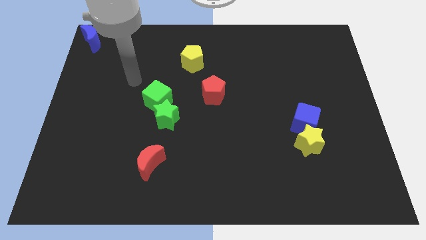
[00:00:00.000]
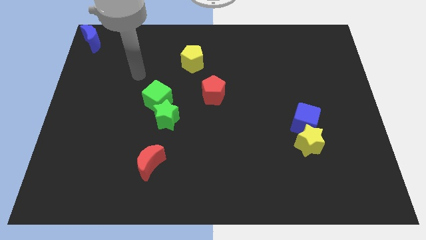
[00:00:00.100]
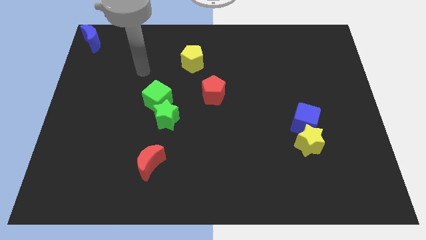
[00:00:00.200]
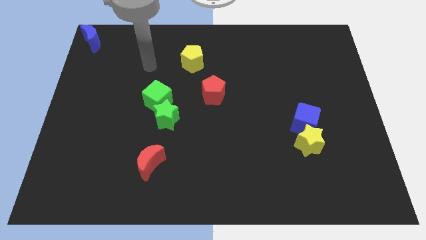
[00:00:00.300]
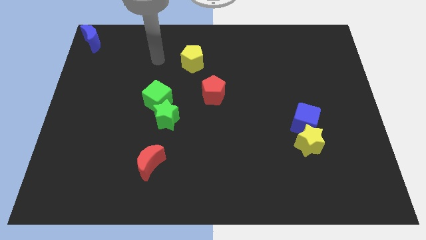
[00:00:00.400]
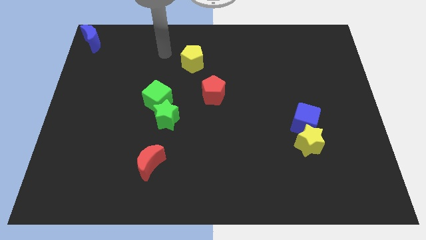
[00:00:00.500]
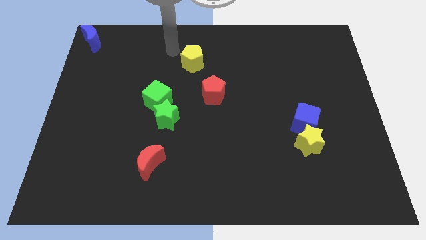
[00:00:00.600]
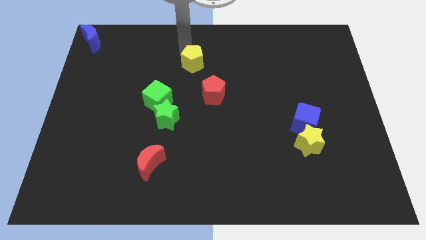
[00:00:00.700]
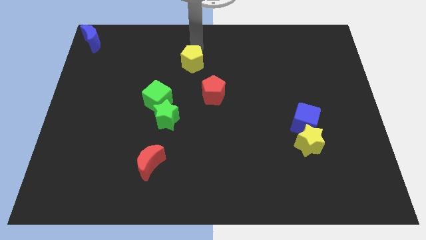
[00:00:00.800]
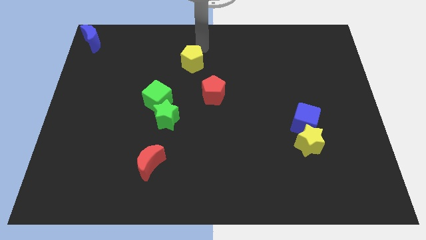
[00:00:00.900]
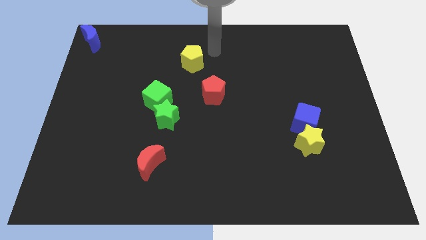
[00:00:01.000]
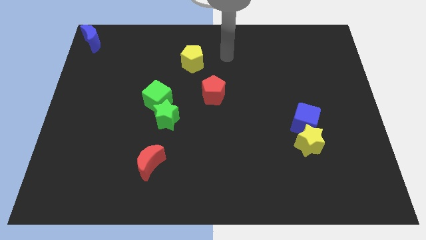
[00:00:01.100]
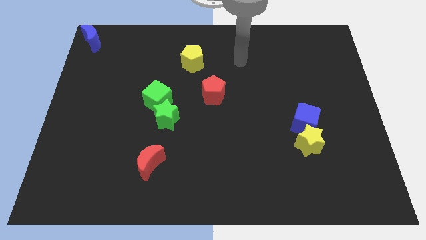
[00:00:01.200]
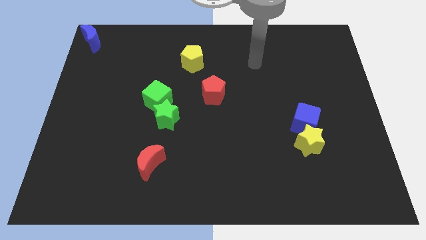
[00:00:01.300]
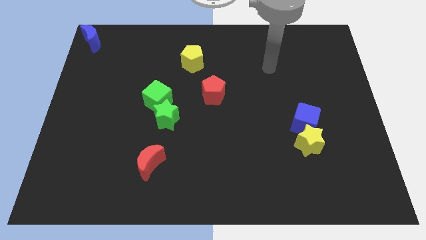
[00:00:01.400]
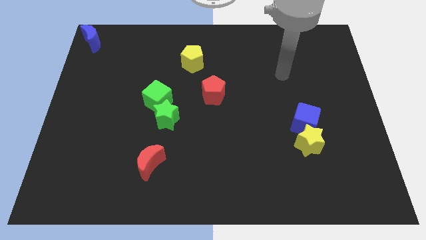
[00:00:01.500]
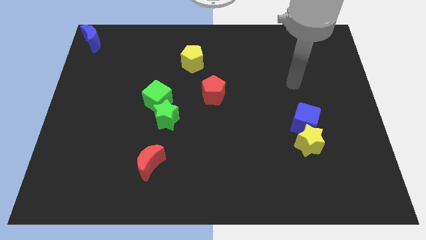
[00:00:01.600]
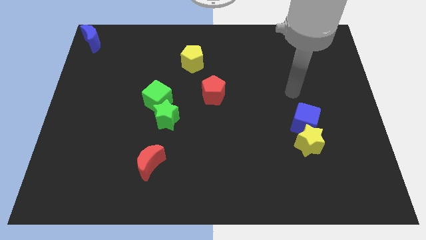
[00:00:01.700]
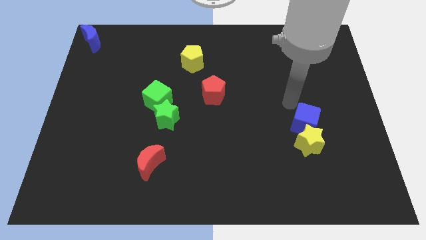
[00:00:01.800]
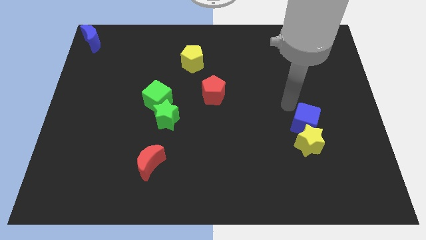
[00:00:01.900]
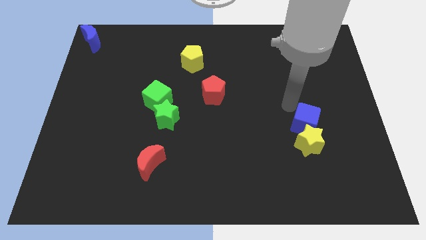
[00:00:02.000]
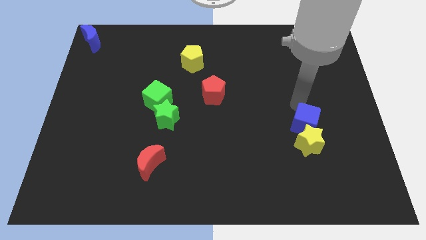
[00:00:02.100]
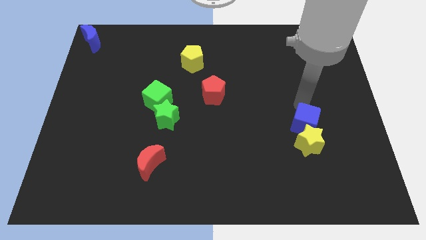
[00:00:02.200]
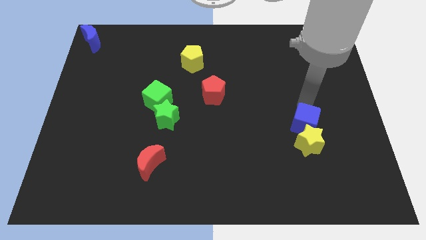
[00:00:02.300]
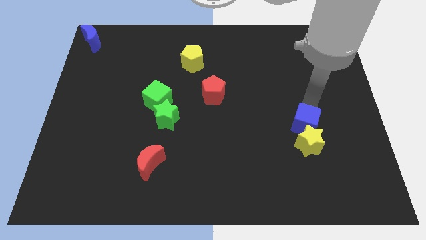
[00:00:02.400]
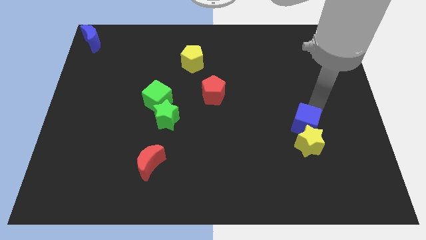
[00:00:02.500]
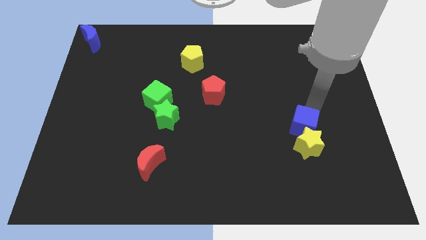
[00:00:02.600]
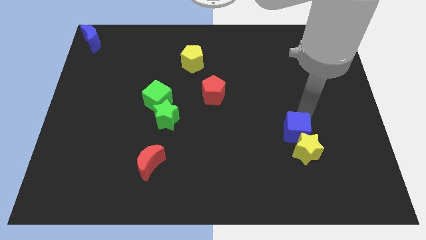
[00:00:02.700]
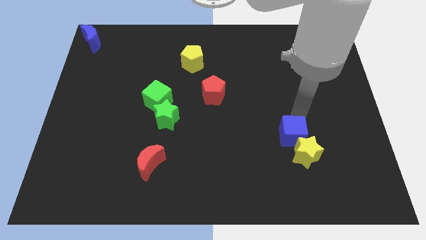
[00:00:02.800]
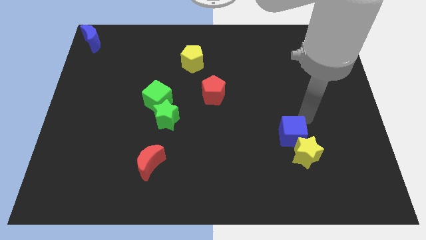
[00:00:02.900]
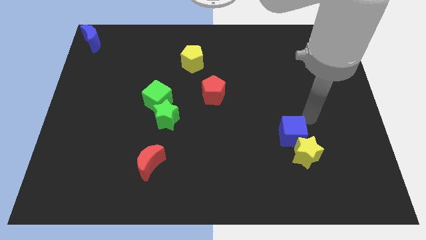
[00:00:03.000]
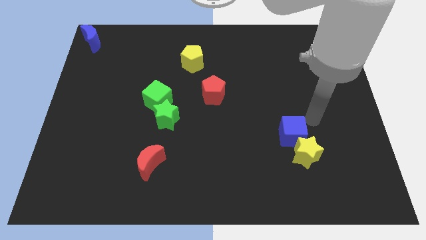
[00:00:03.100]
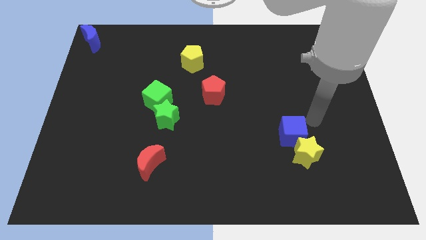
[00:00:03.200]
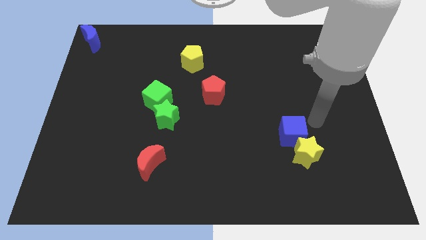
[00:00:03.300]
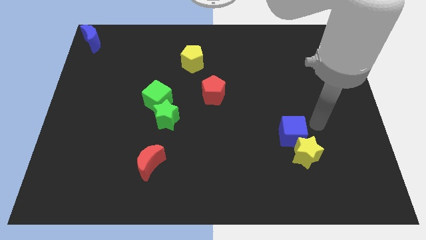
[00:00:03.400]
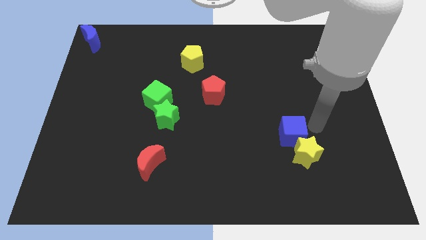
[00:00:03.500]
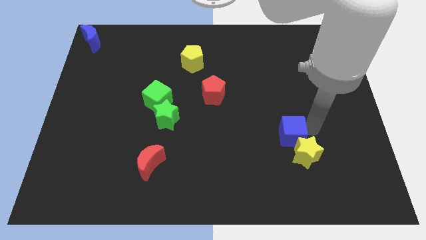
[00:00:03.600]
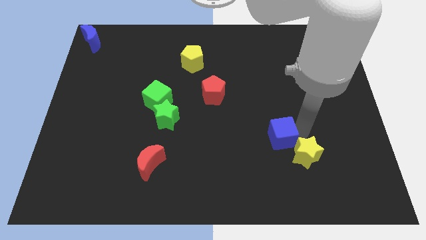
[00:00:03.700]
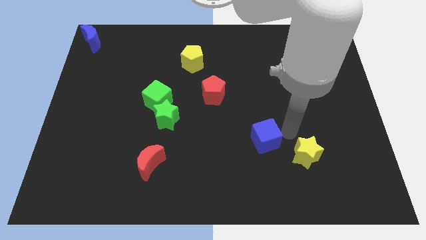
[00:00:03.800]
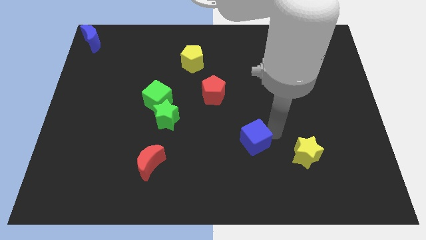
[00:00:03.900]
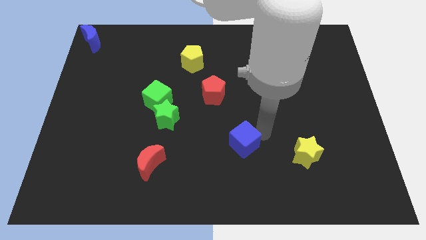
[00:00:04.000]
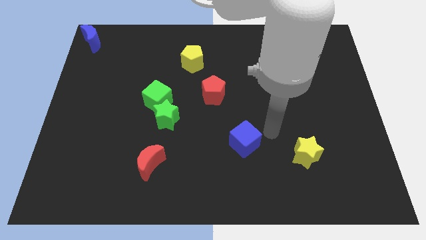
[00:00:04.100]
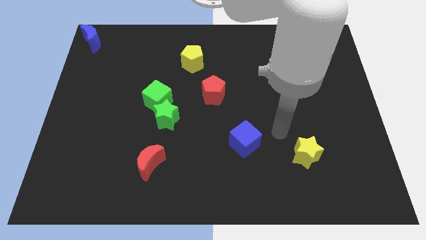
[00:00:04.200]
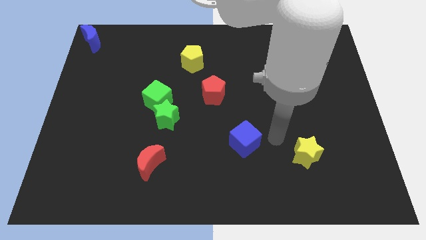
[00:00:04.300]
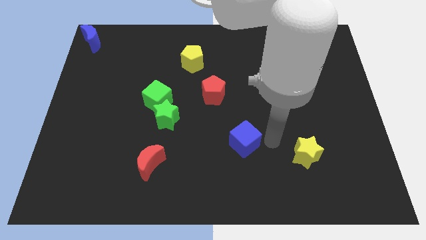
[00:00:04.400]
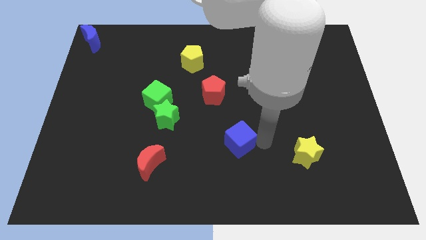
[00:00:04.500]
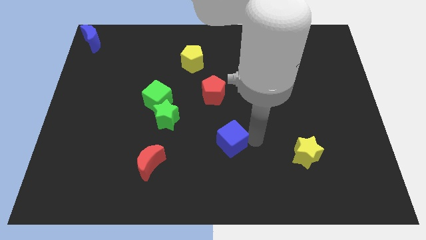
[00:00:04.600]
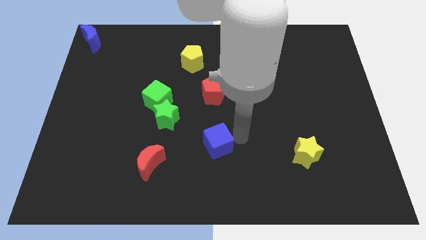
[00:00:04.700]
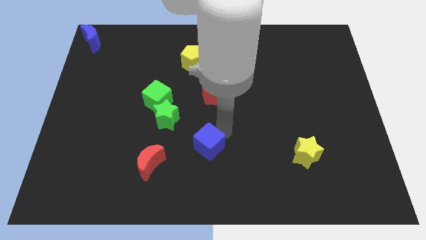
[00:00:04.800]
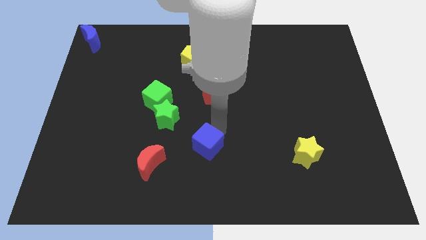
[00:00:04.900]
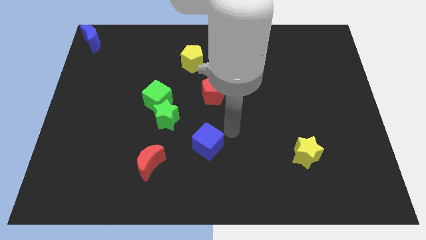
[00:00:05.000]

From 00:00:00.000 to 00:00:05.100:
place the blue cube below the red pentagon

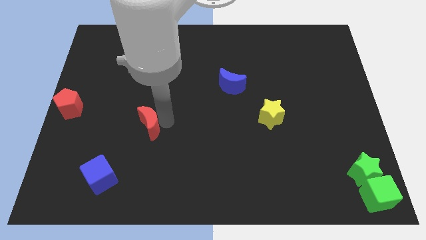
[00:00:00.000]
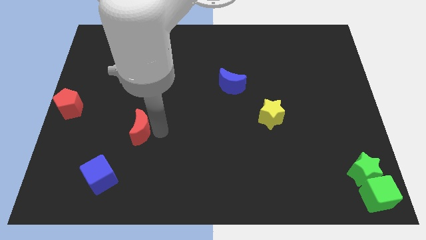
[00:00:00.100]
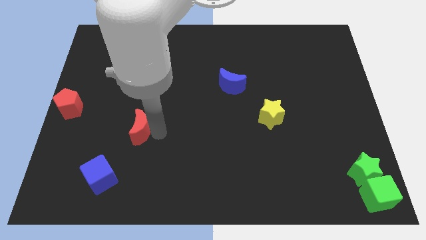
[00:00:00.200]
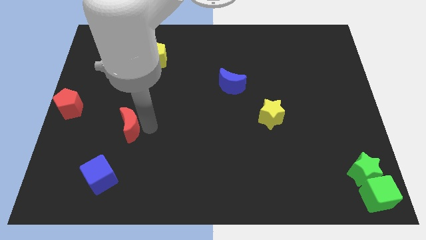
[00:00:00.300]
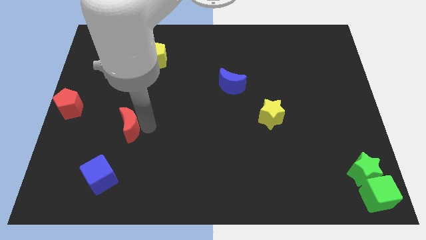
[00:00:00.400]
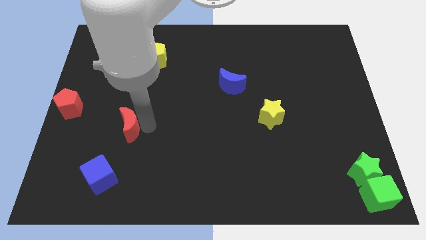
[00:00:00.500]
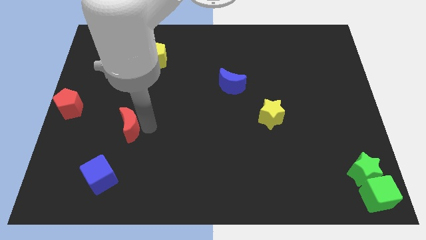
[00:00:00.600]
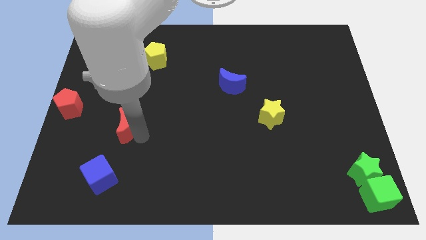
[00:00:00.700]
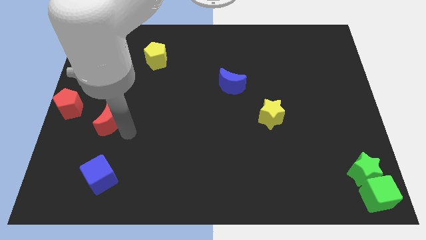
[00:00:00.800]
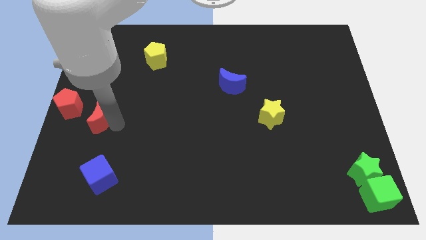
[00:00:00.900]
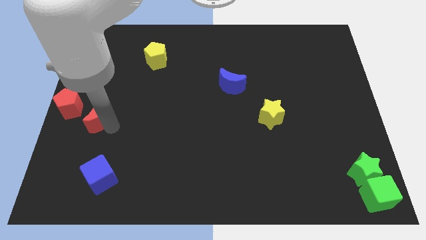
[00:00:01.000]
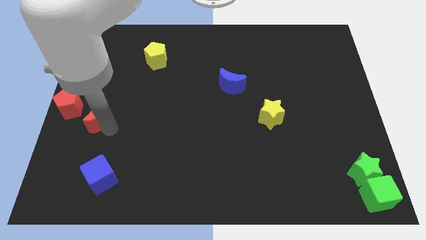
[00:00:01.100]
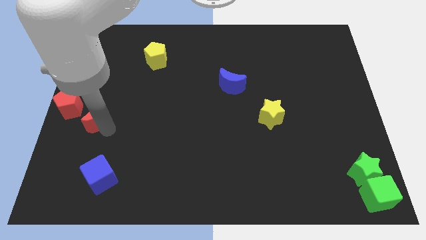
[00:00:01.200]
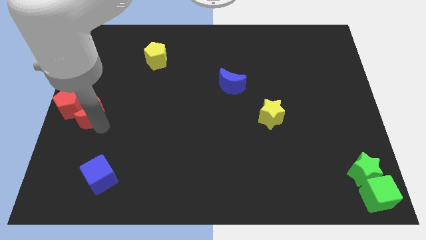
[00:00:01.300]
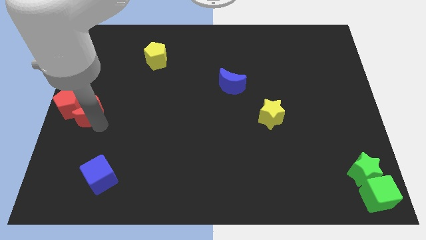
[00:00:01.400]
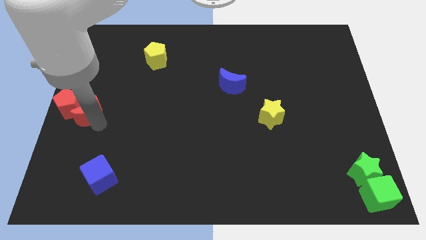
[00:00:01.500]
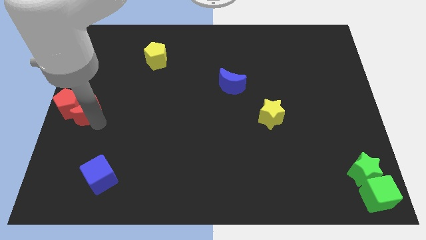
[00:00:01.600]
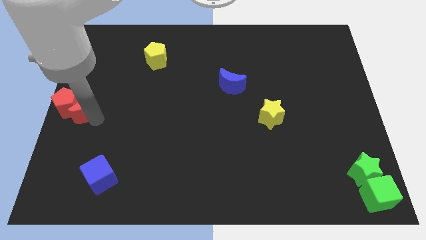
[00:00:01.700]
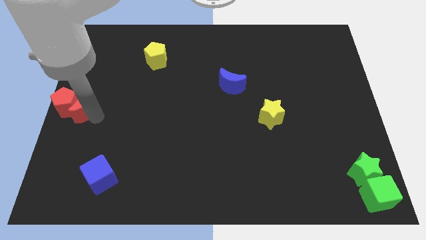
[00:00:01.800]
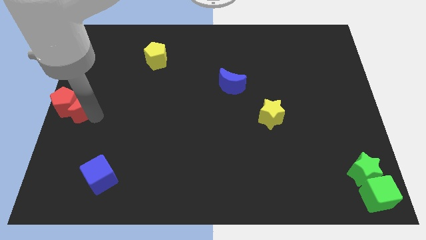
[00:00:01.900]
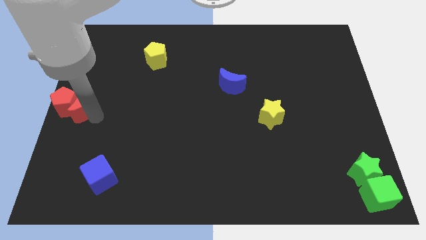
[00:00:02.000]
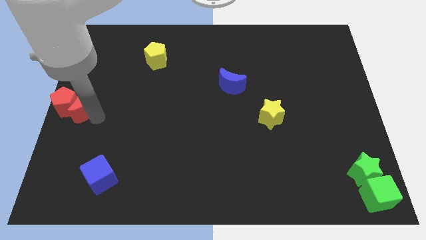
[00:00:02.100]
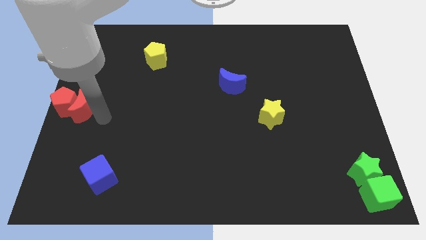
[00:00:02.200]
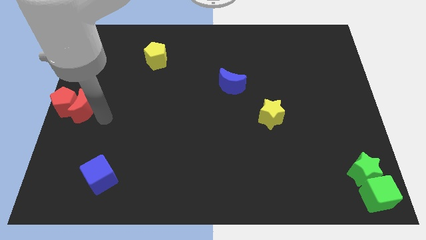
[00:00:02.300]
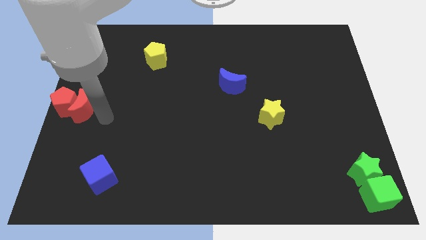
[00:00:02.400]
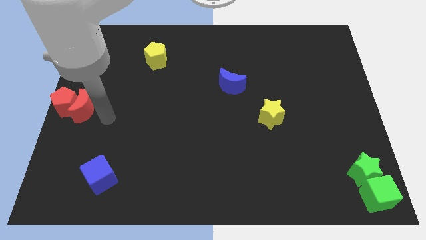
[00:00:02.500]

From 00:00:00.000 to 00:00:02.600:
push the red crescent into the red pentagon

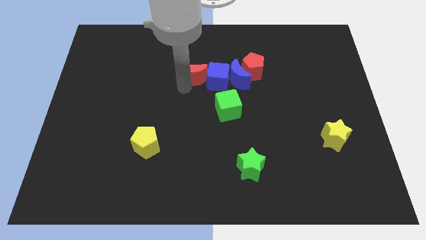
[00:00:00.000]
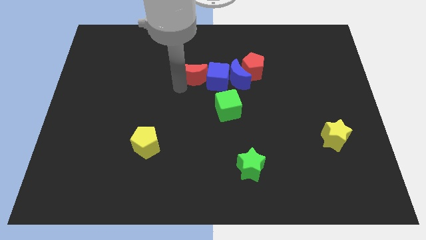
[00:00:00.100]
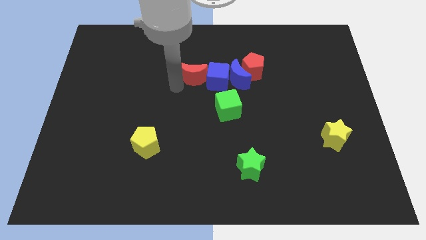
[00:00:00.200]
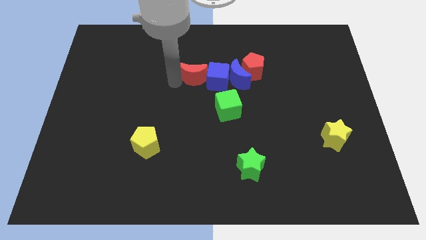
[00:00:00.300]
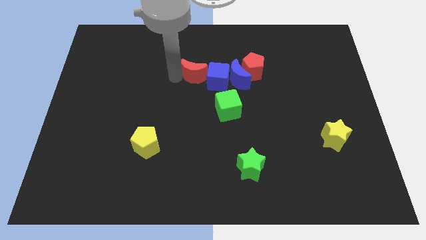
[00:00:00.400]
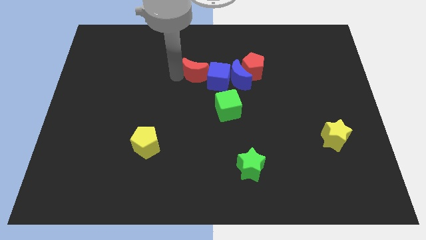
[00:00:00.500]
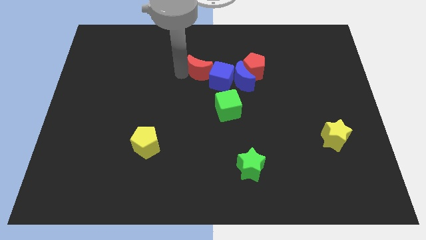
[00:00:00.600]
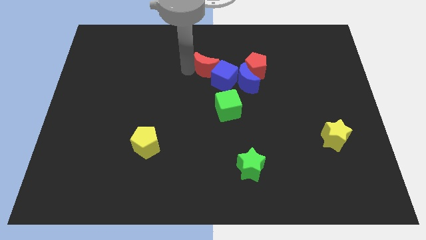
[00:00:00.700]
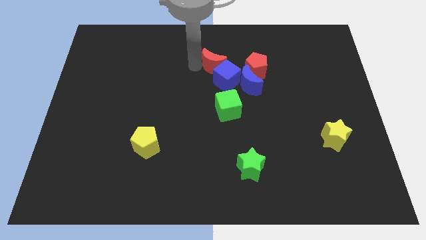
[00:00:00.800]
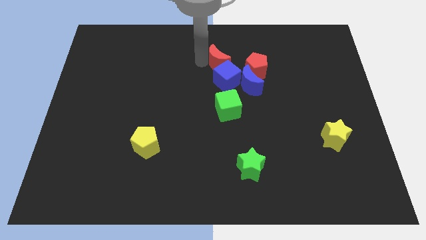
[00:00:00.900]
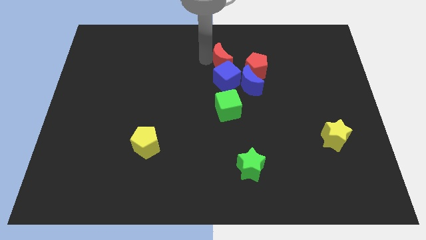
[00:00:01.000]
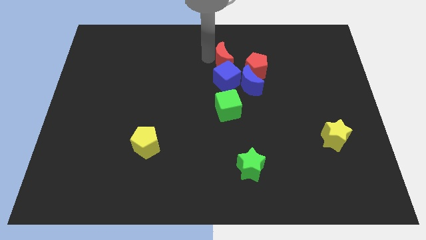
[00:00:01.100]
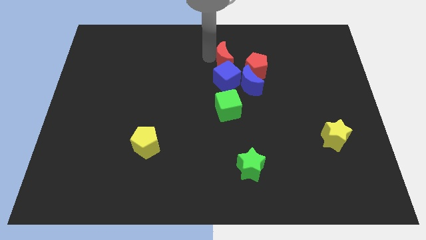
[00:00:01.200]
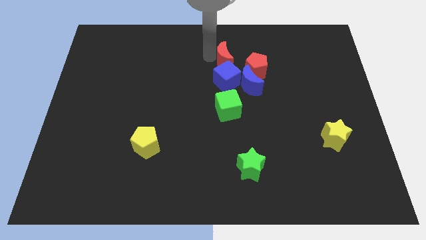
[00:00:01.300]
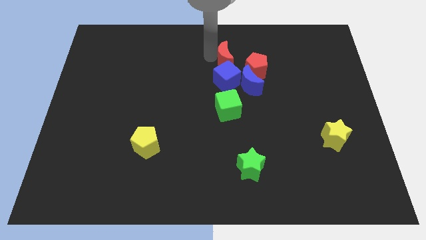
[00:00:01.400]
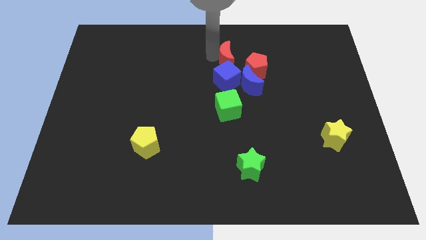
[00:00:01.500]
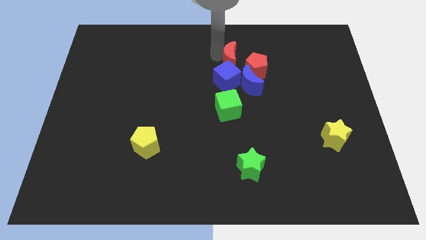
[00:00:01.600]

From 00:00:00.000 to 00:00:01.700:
put the red crescent above the blue cube
